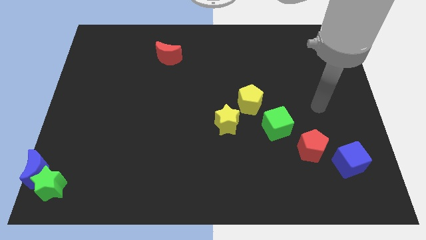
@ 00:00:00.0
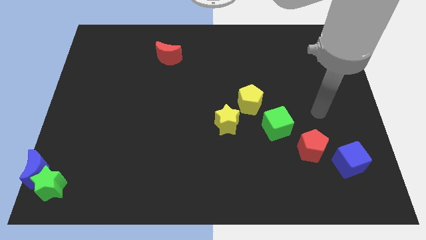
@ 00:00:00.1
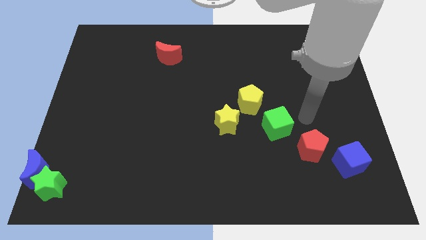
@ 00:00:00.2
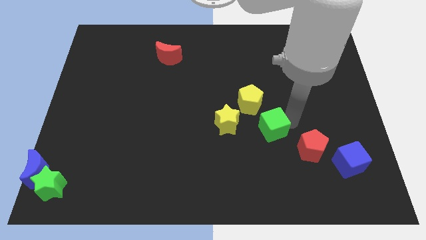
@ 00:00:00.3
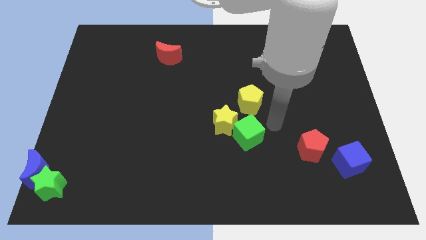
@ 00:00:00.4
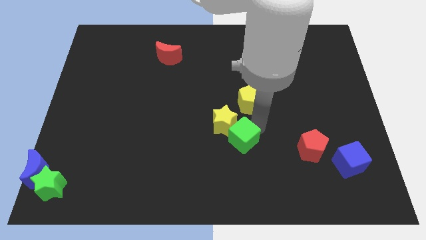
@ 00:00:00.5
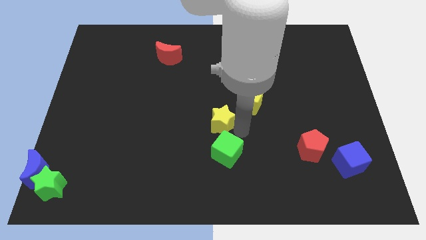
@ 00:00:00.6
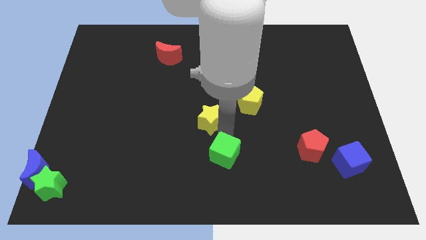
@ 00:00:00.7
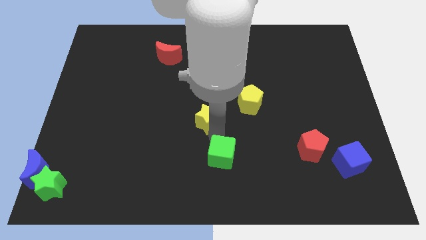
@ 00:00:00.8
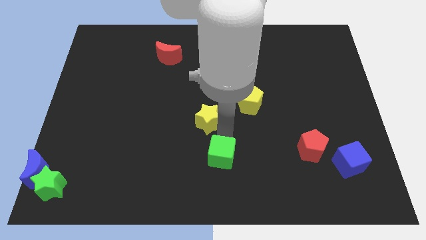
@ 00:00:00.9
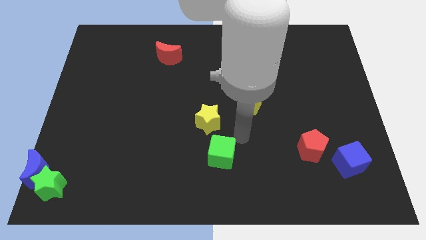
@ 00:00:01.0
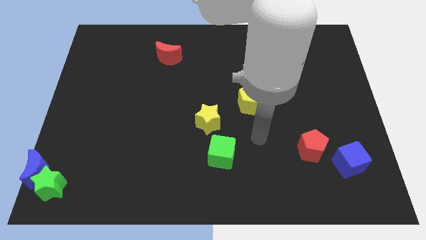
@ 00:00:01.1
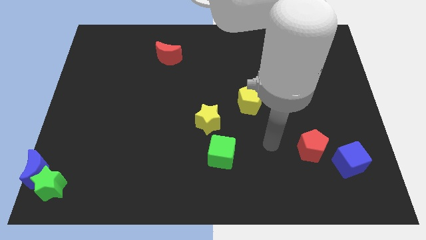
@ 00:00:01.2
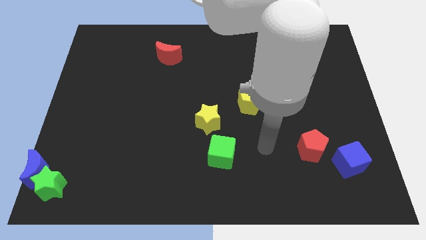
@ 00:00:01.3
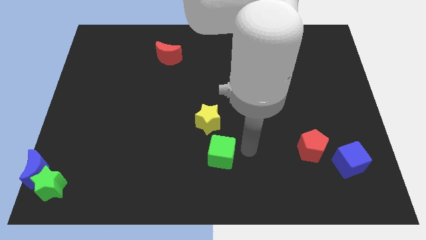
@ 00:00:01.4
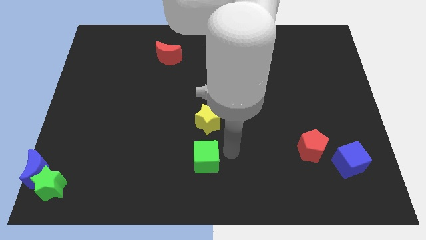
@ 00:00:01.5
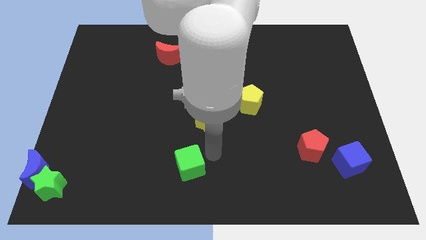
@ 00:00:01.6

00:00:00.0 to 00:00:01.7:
place the green cube down to the yellow star

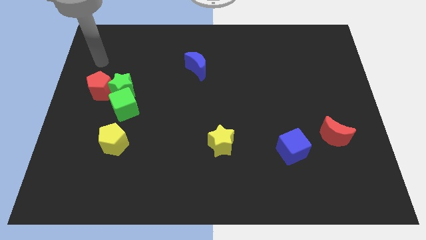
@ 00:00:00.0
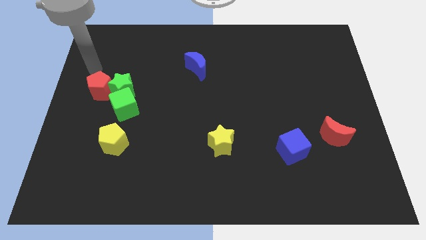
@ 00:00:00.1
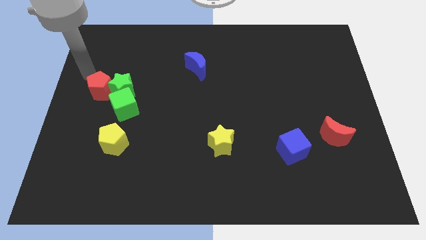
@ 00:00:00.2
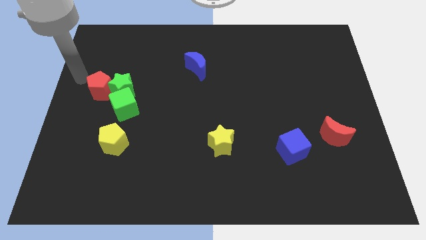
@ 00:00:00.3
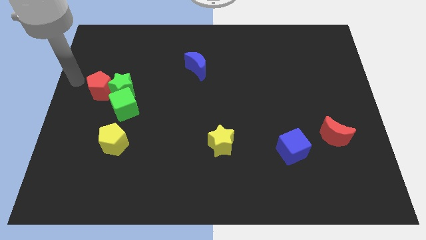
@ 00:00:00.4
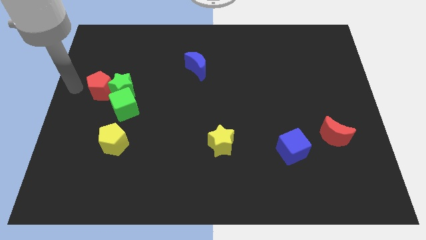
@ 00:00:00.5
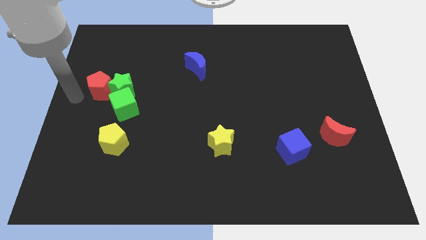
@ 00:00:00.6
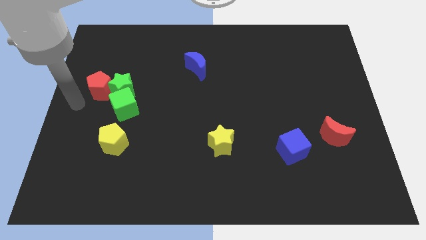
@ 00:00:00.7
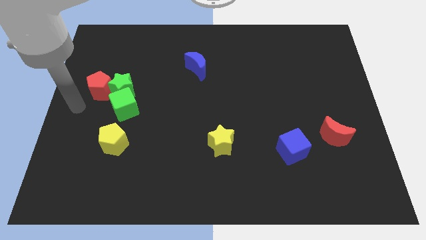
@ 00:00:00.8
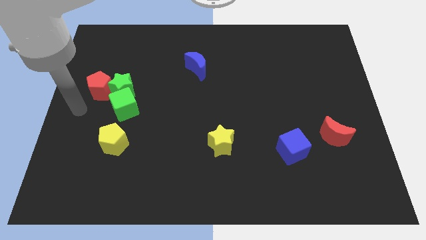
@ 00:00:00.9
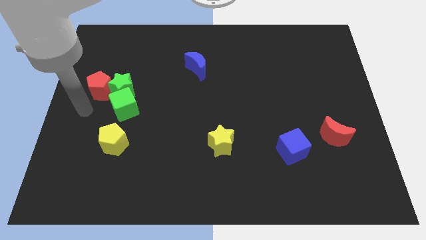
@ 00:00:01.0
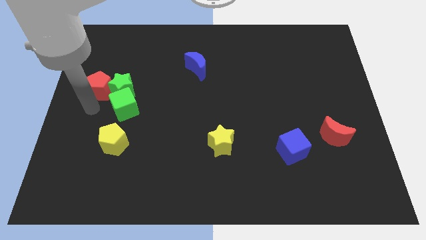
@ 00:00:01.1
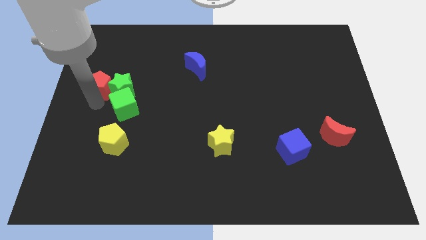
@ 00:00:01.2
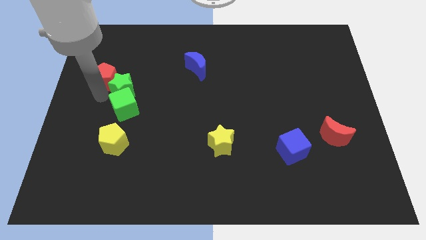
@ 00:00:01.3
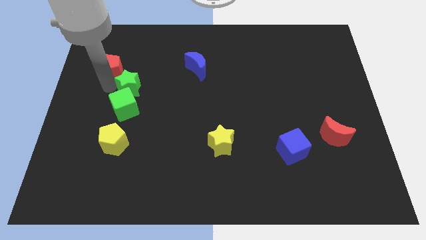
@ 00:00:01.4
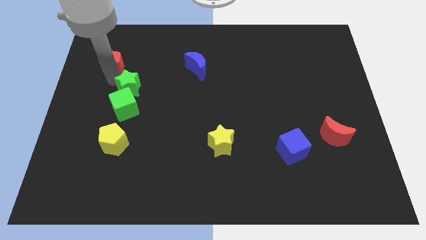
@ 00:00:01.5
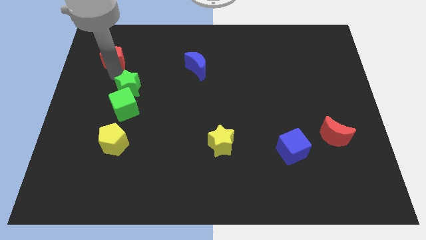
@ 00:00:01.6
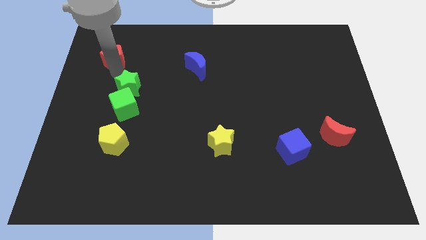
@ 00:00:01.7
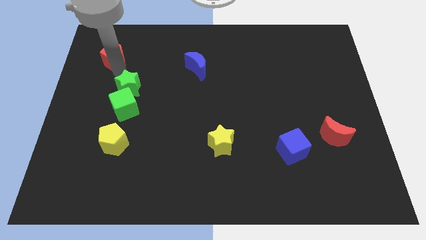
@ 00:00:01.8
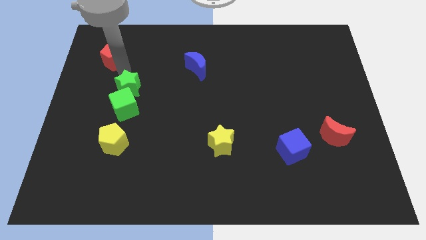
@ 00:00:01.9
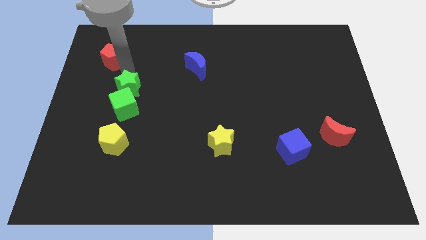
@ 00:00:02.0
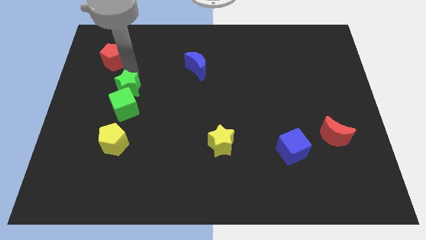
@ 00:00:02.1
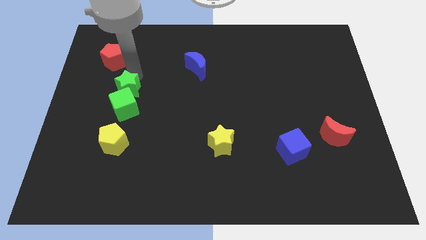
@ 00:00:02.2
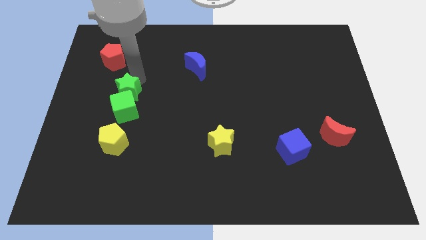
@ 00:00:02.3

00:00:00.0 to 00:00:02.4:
move the red pentagon away from the green star

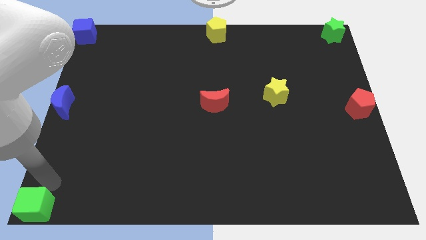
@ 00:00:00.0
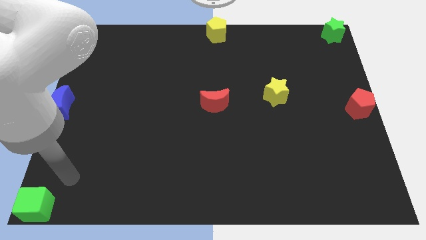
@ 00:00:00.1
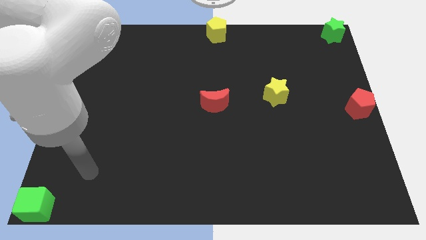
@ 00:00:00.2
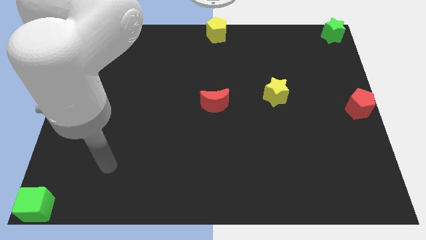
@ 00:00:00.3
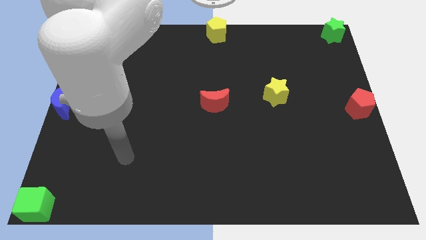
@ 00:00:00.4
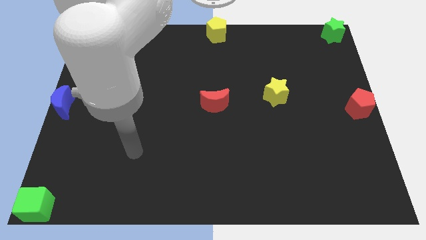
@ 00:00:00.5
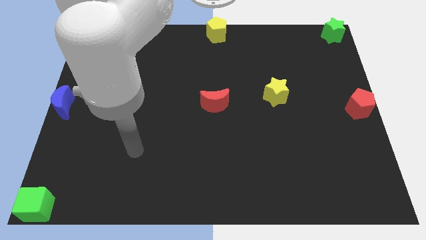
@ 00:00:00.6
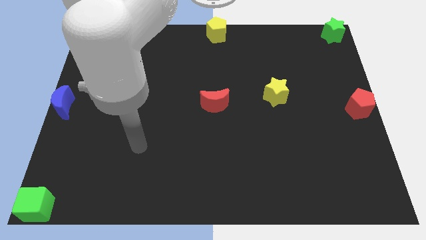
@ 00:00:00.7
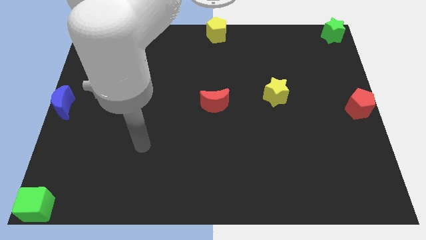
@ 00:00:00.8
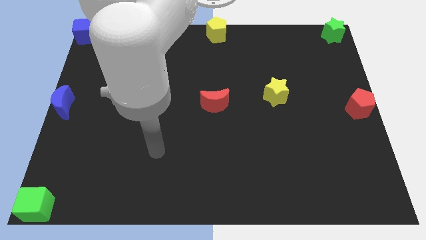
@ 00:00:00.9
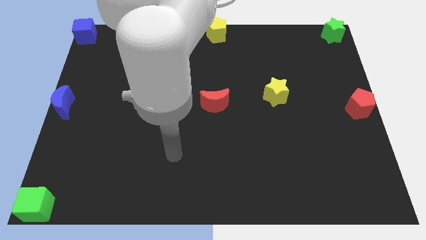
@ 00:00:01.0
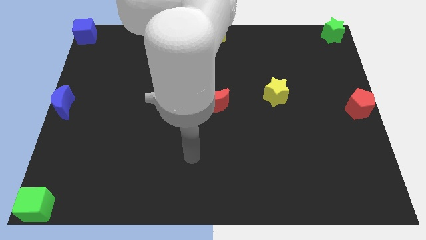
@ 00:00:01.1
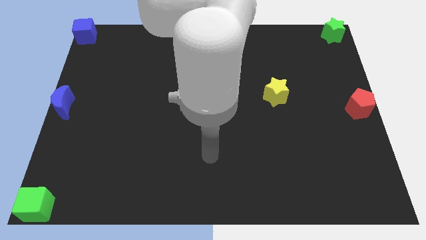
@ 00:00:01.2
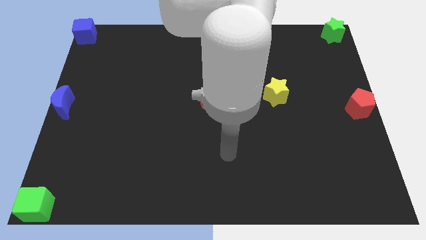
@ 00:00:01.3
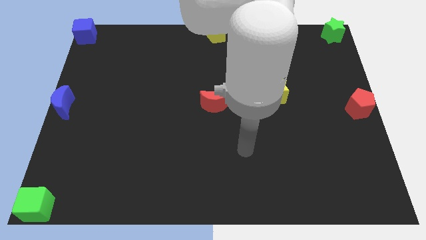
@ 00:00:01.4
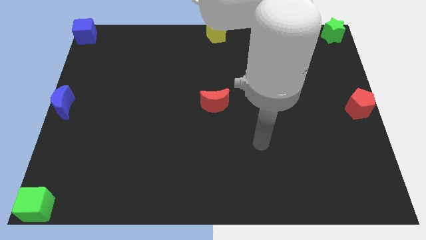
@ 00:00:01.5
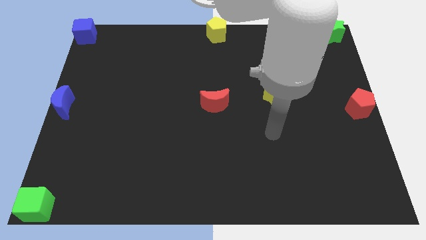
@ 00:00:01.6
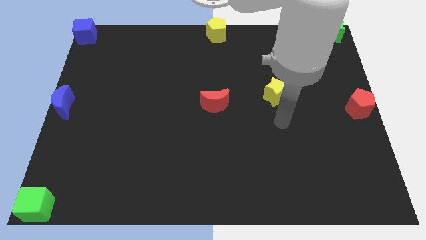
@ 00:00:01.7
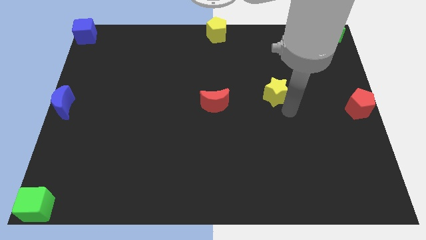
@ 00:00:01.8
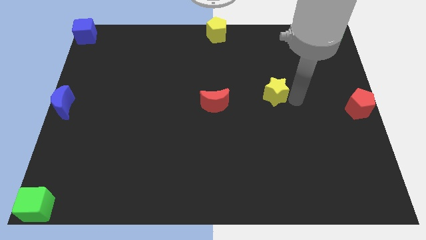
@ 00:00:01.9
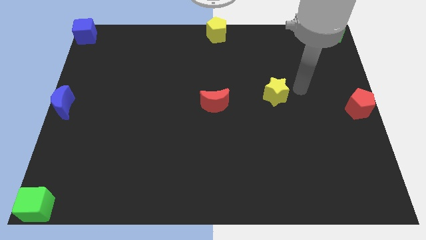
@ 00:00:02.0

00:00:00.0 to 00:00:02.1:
move your arm right to the yellow star

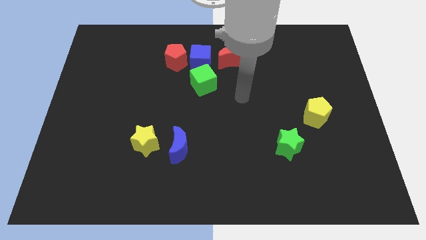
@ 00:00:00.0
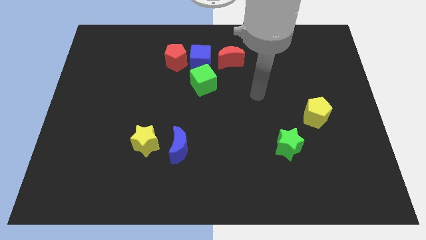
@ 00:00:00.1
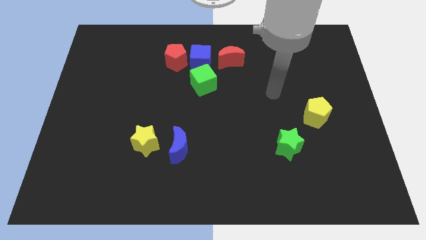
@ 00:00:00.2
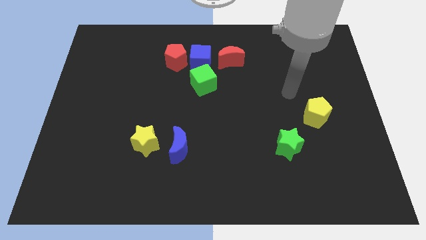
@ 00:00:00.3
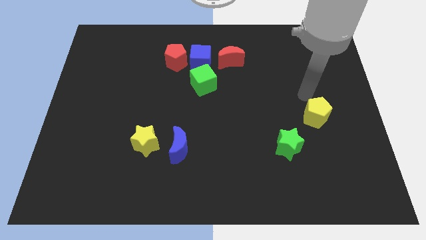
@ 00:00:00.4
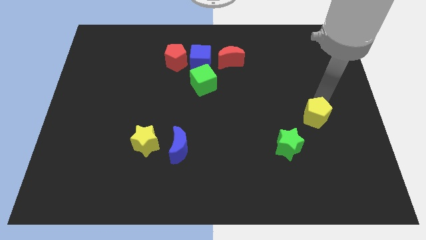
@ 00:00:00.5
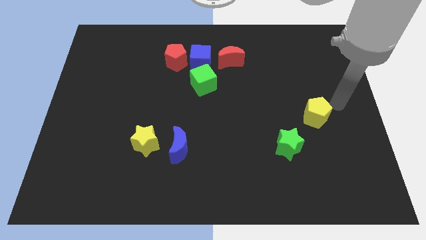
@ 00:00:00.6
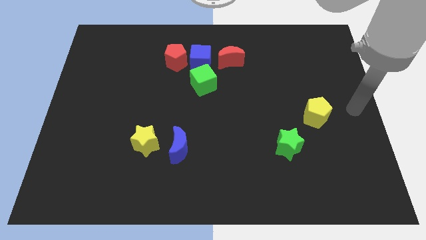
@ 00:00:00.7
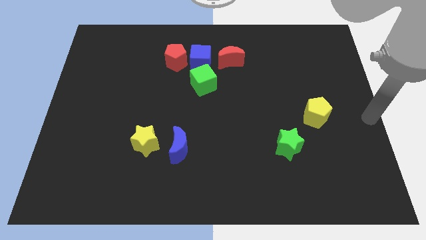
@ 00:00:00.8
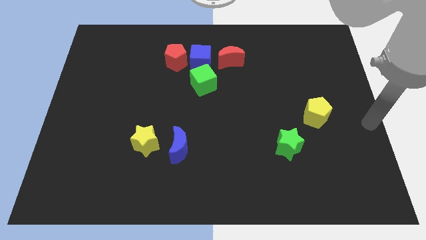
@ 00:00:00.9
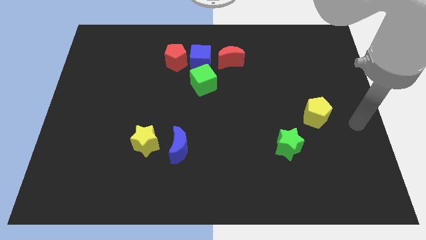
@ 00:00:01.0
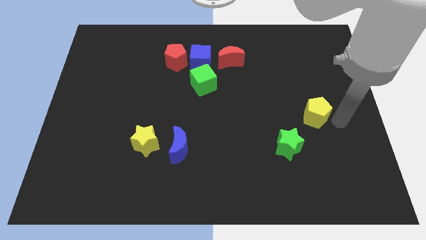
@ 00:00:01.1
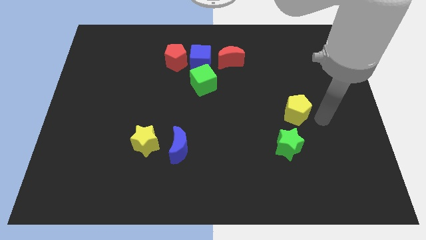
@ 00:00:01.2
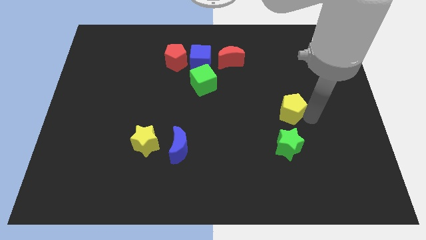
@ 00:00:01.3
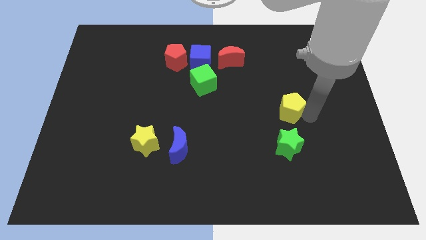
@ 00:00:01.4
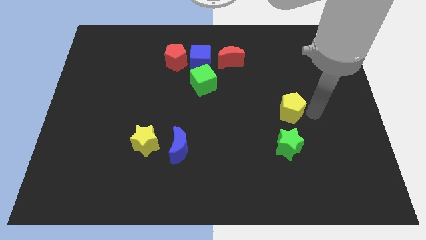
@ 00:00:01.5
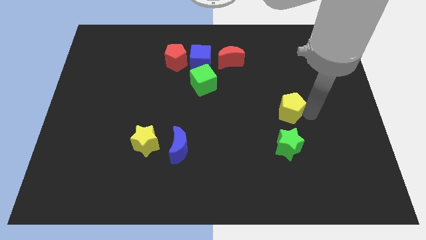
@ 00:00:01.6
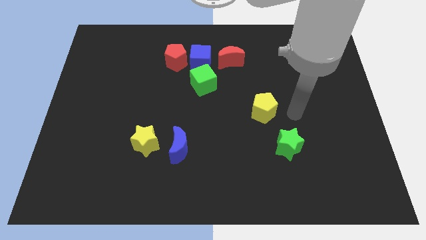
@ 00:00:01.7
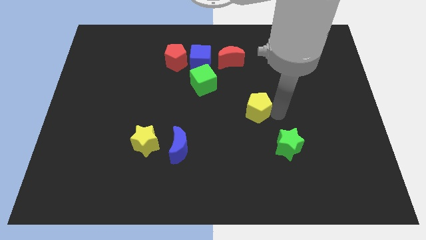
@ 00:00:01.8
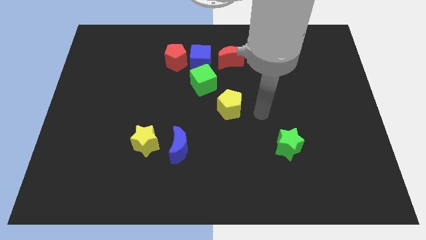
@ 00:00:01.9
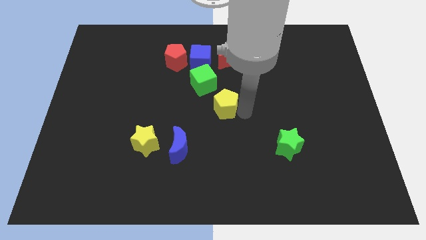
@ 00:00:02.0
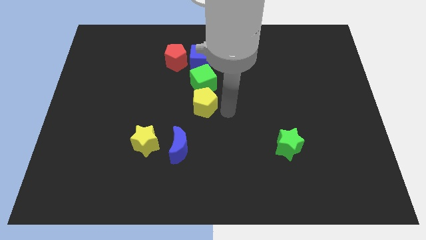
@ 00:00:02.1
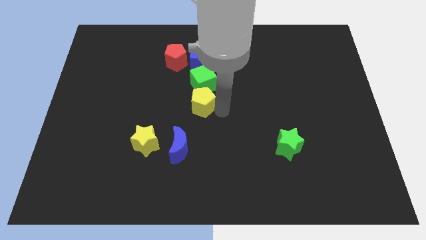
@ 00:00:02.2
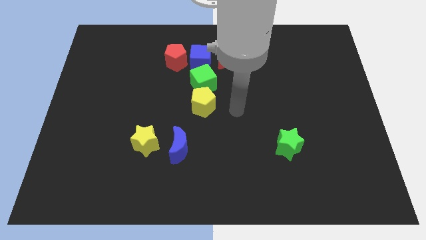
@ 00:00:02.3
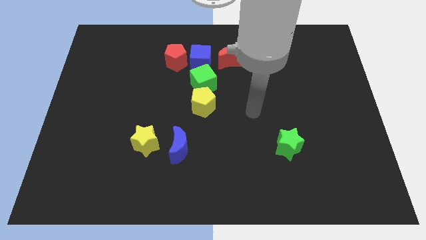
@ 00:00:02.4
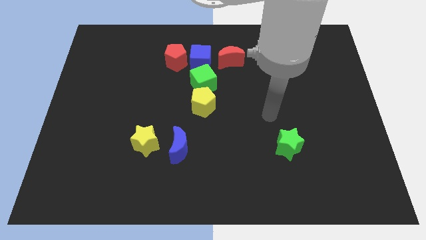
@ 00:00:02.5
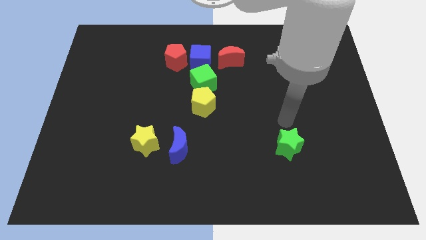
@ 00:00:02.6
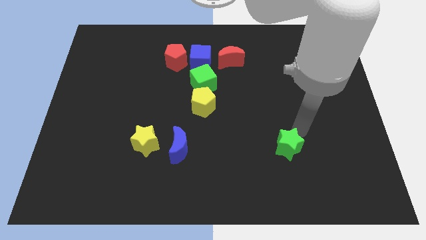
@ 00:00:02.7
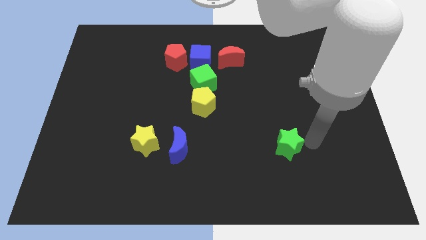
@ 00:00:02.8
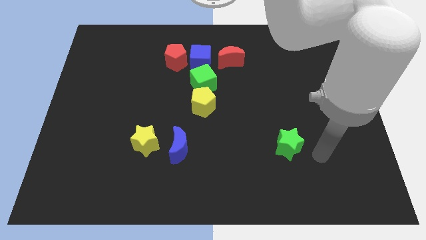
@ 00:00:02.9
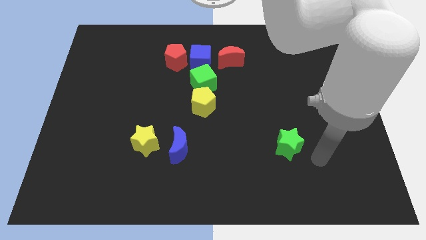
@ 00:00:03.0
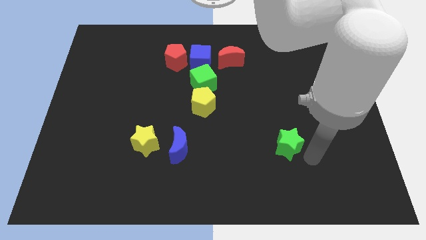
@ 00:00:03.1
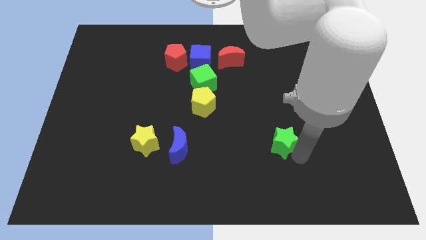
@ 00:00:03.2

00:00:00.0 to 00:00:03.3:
slide the yellow pentagon to the bottom side of the green cube
